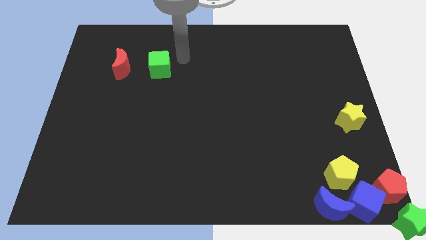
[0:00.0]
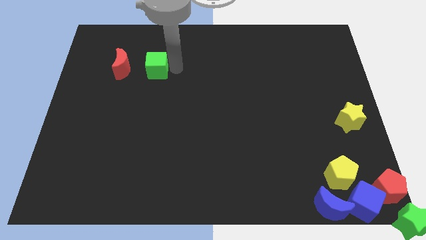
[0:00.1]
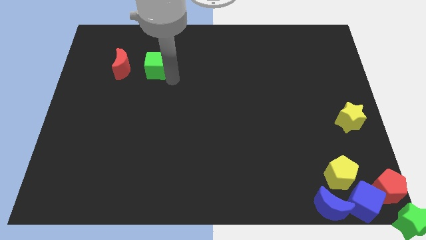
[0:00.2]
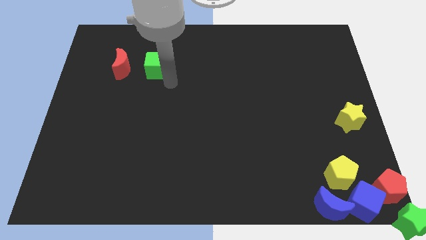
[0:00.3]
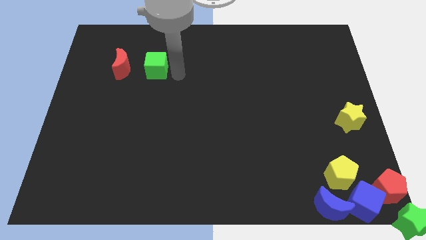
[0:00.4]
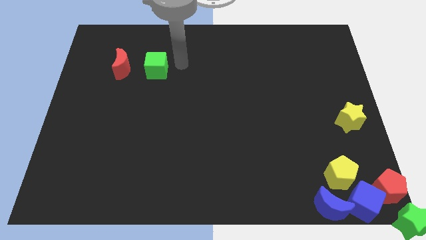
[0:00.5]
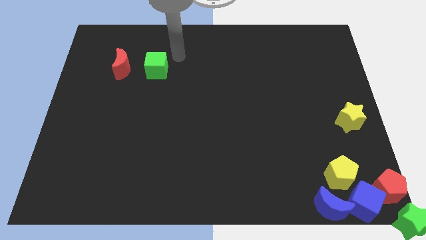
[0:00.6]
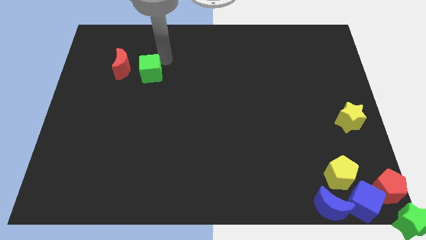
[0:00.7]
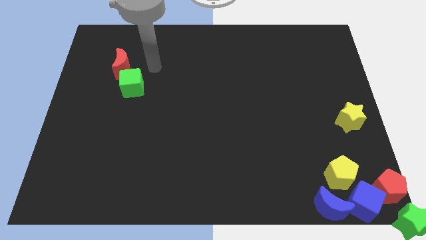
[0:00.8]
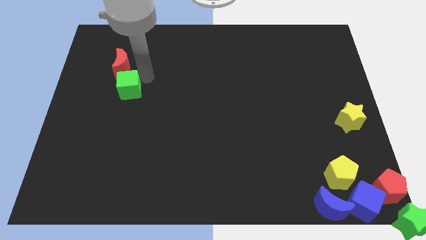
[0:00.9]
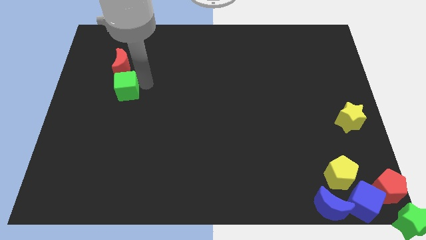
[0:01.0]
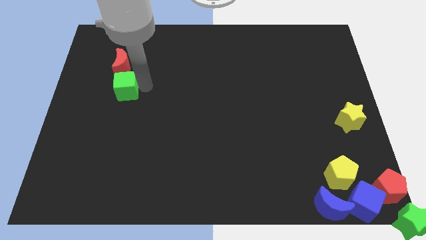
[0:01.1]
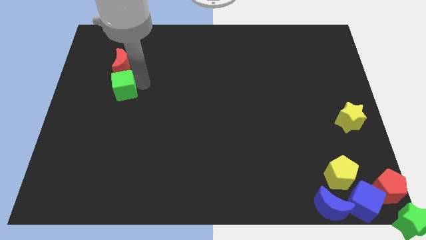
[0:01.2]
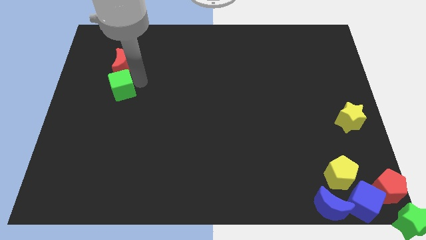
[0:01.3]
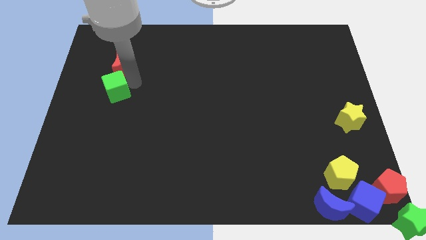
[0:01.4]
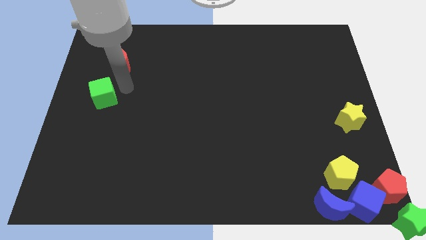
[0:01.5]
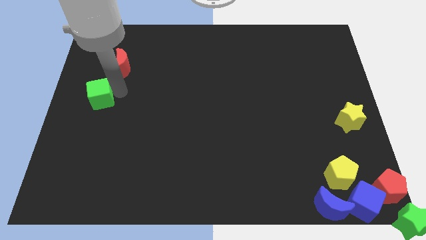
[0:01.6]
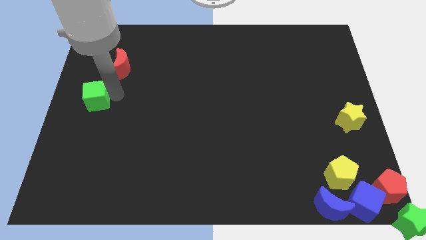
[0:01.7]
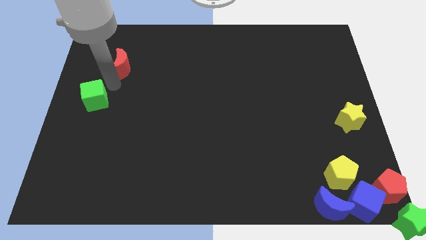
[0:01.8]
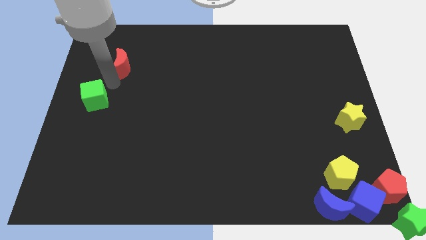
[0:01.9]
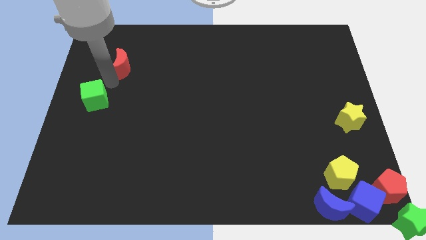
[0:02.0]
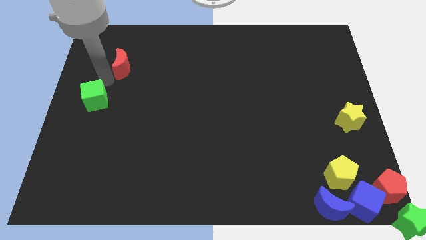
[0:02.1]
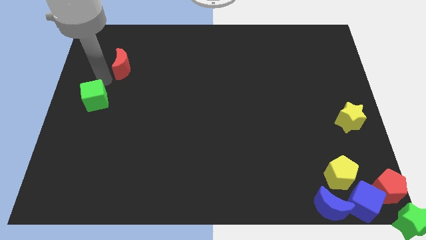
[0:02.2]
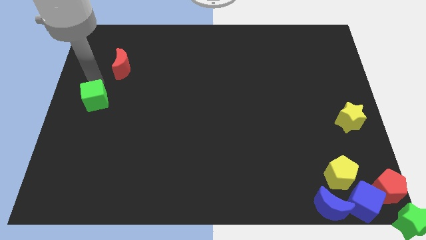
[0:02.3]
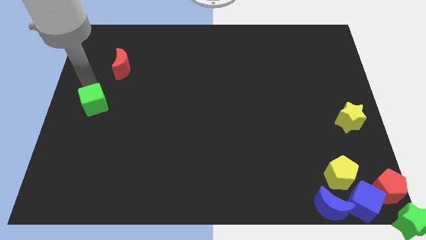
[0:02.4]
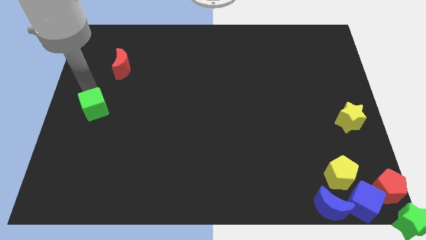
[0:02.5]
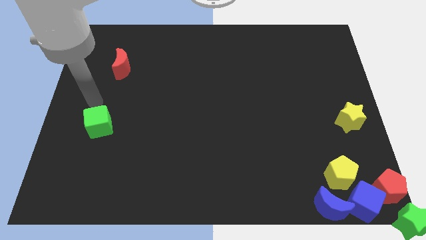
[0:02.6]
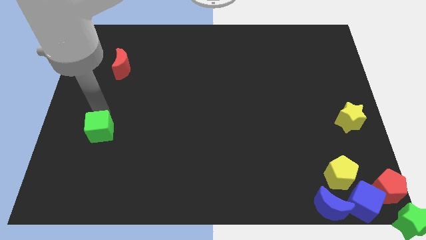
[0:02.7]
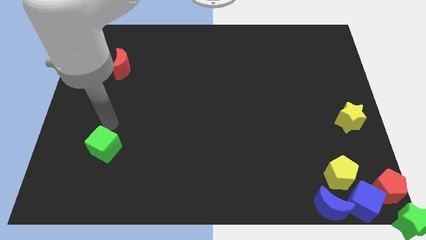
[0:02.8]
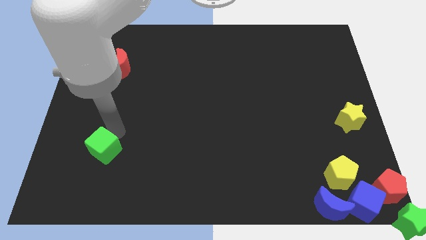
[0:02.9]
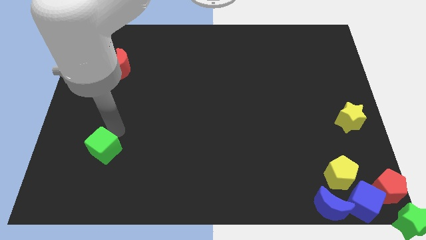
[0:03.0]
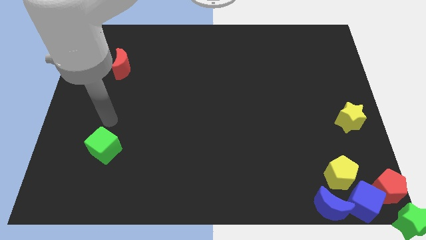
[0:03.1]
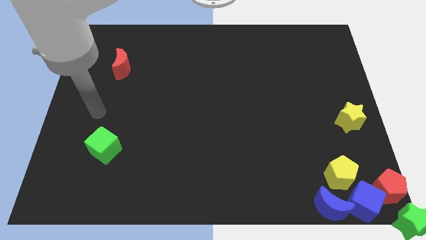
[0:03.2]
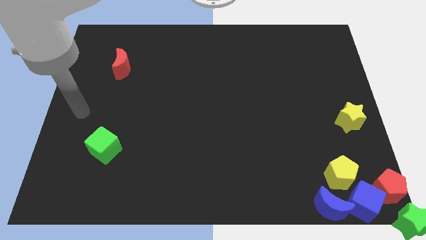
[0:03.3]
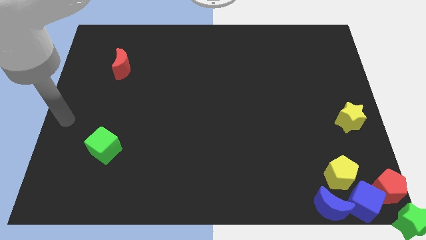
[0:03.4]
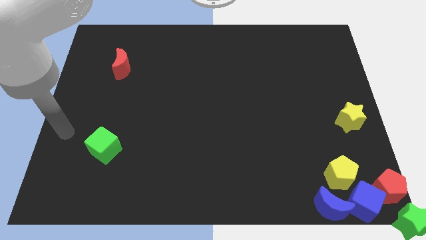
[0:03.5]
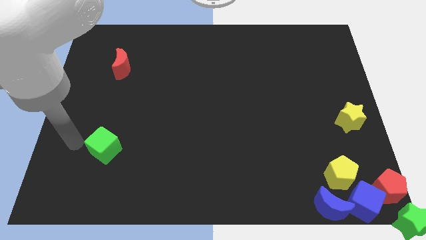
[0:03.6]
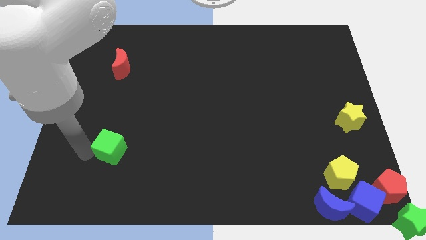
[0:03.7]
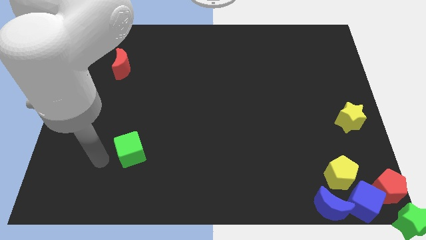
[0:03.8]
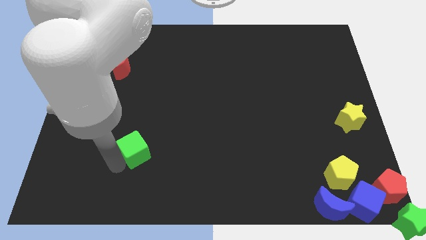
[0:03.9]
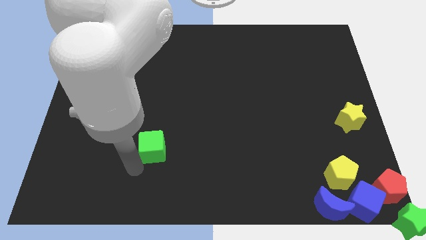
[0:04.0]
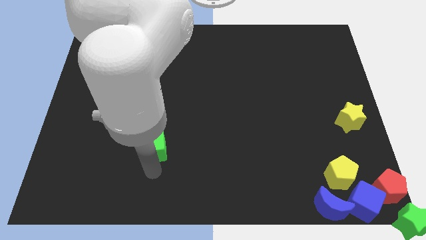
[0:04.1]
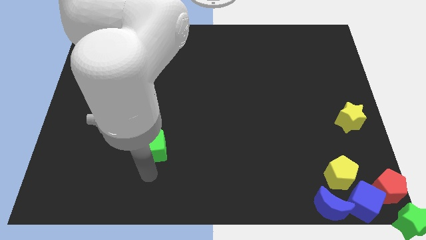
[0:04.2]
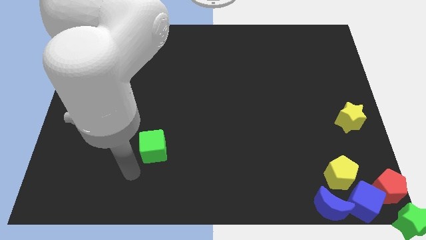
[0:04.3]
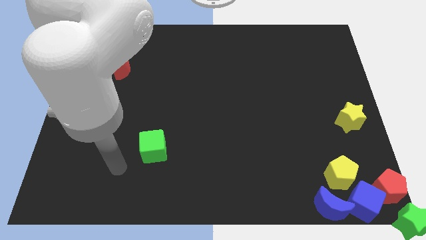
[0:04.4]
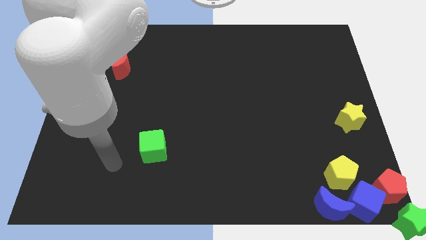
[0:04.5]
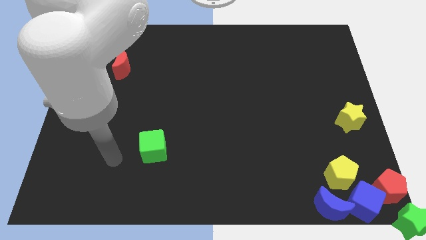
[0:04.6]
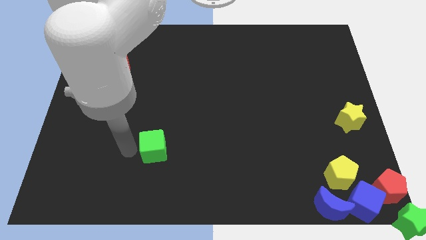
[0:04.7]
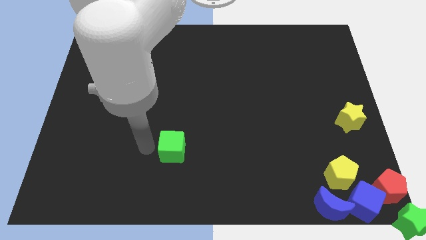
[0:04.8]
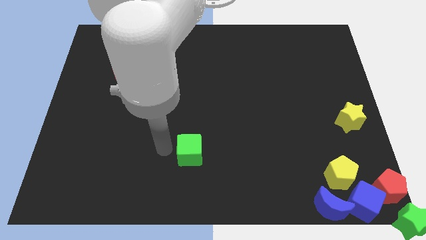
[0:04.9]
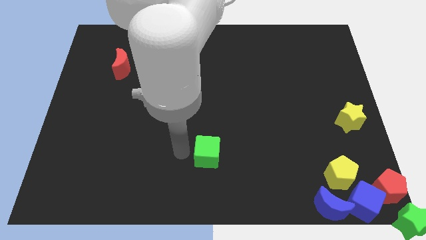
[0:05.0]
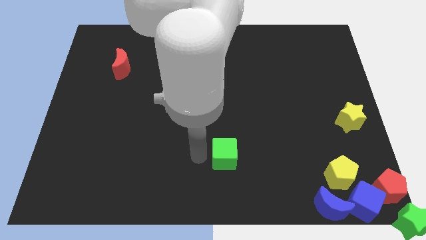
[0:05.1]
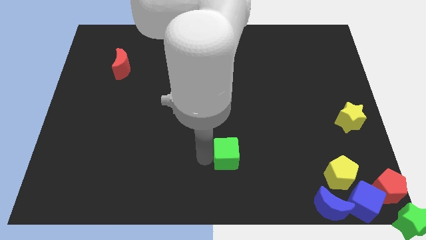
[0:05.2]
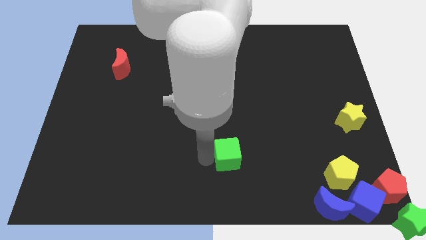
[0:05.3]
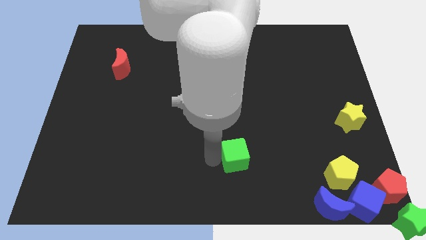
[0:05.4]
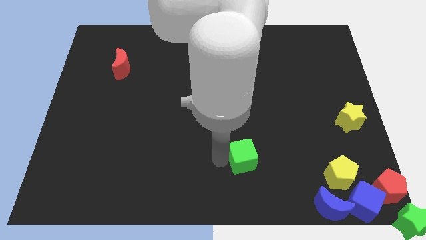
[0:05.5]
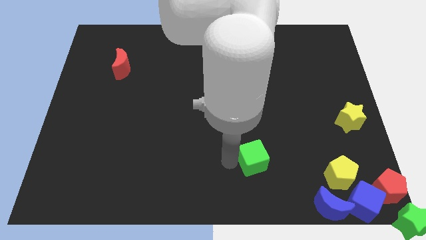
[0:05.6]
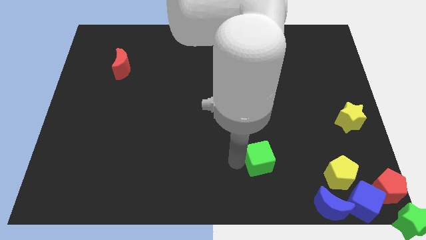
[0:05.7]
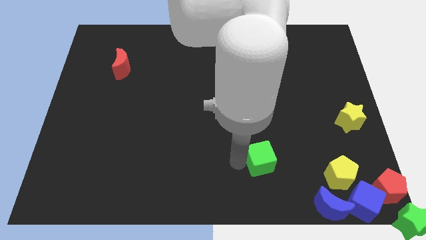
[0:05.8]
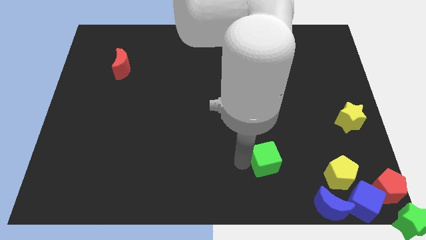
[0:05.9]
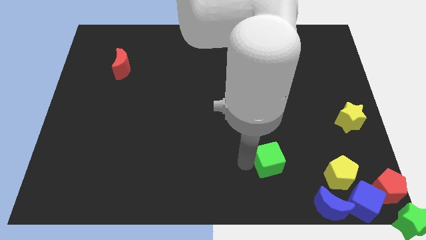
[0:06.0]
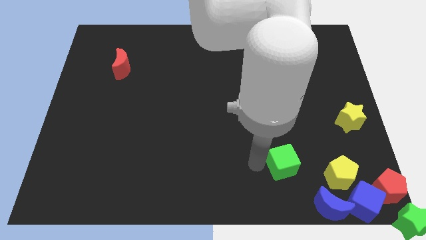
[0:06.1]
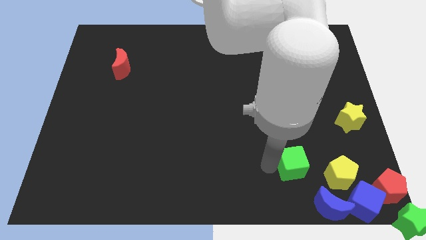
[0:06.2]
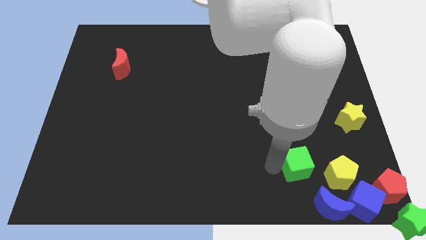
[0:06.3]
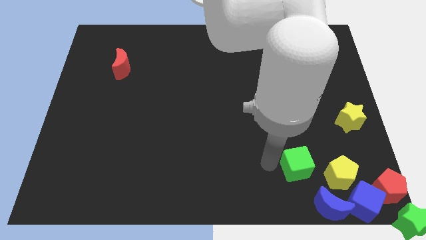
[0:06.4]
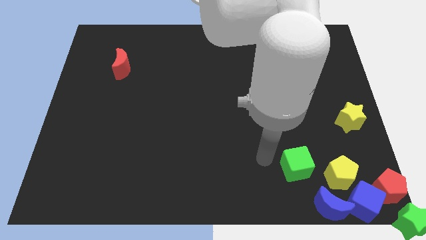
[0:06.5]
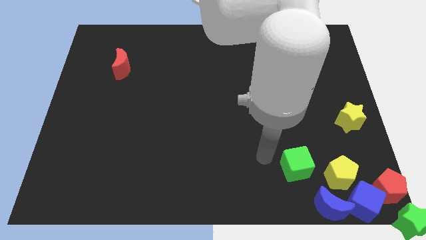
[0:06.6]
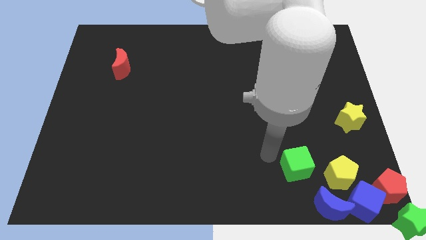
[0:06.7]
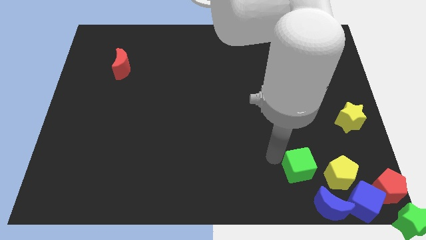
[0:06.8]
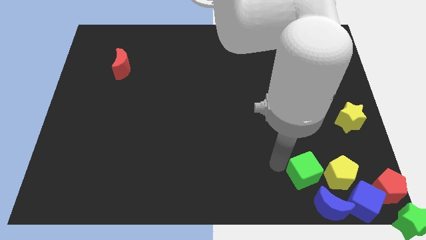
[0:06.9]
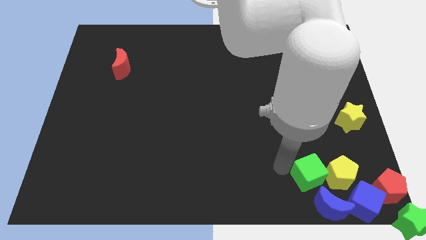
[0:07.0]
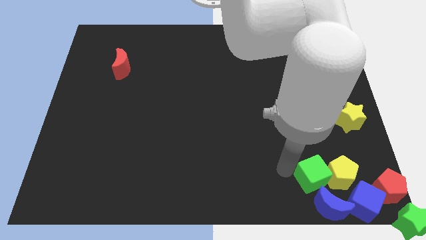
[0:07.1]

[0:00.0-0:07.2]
push the green cube into the yellow pentagon

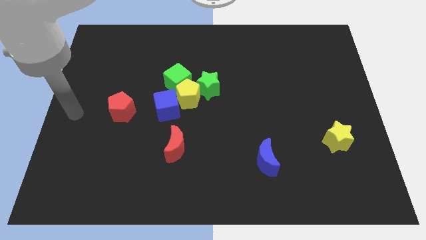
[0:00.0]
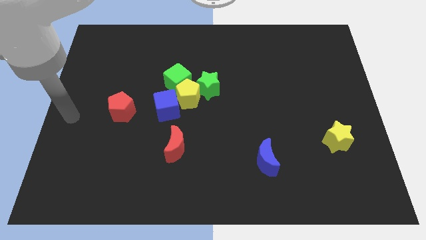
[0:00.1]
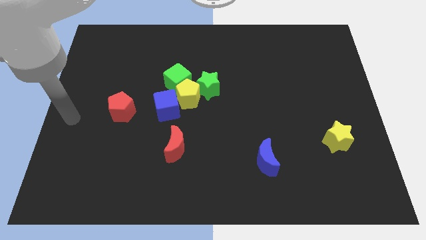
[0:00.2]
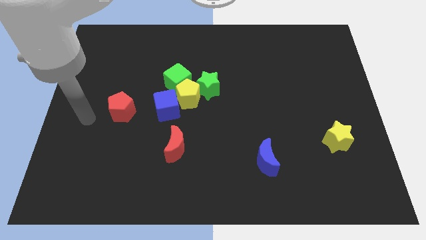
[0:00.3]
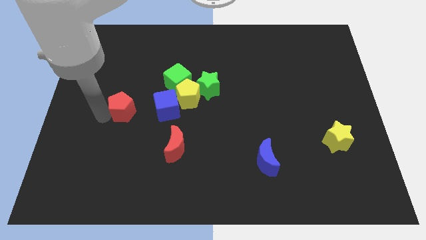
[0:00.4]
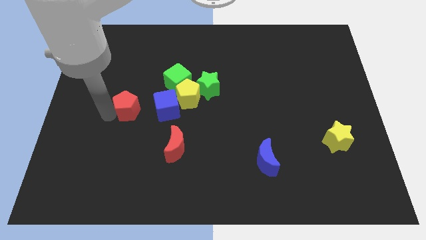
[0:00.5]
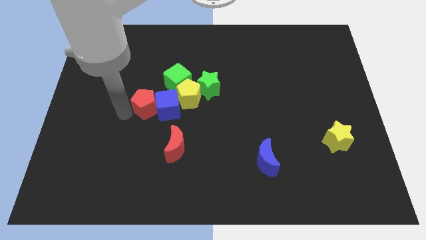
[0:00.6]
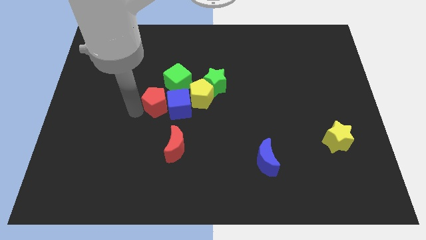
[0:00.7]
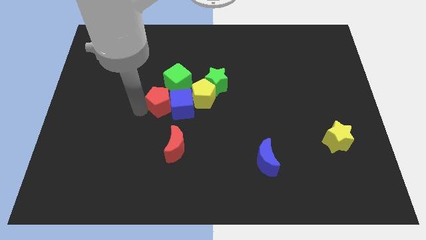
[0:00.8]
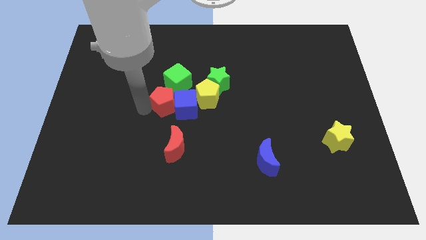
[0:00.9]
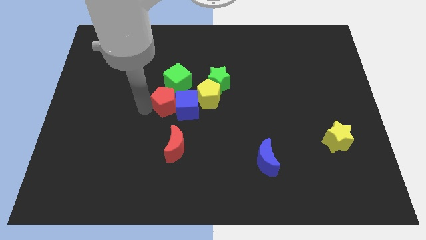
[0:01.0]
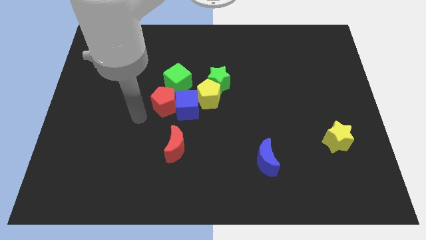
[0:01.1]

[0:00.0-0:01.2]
move the red pentagon towards the left side of the blue cube

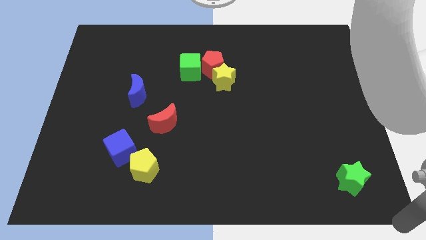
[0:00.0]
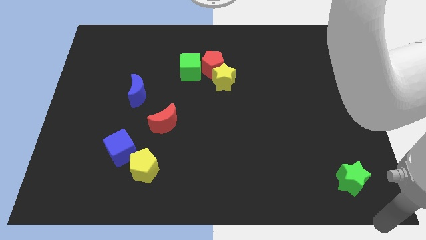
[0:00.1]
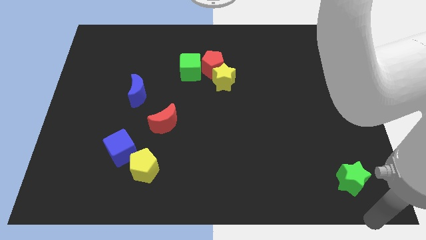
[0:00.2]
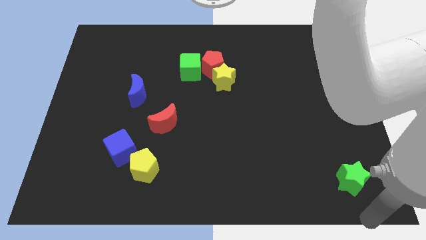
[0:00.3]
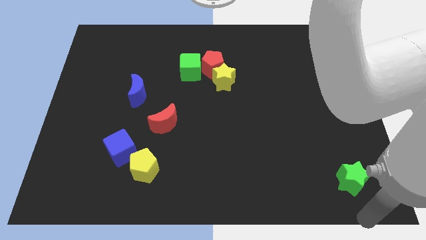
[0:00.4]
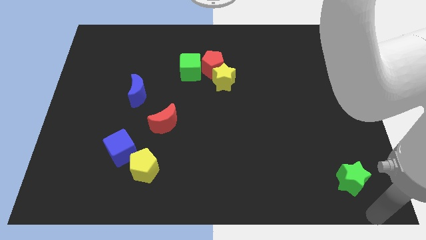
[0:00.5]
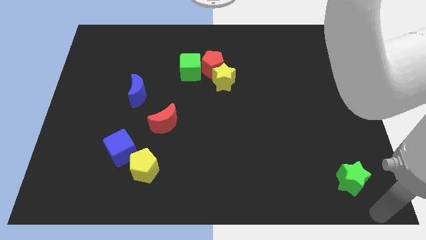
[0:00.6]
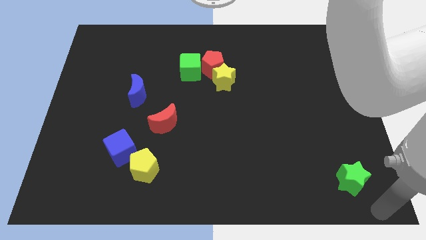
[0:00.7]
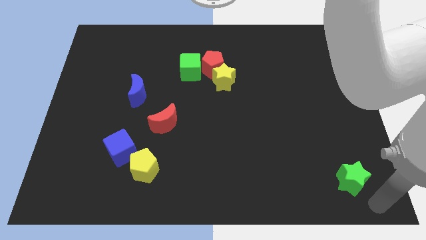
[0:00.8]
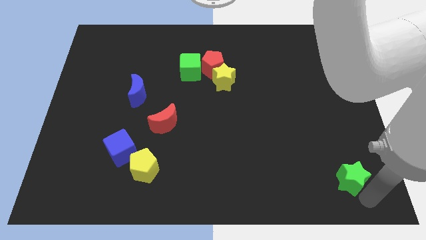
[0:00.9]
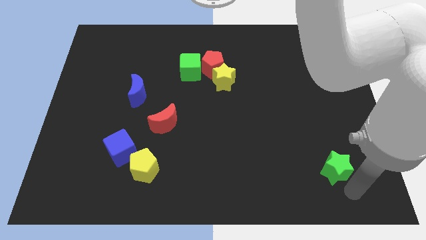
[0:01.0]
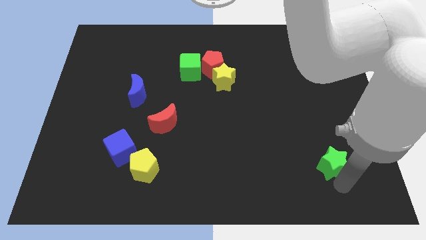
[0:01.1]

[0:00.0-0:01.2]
place the green star parallel to the yellow pentagon
